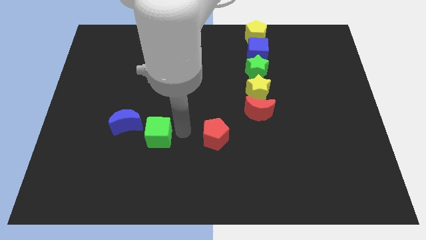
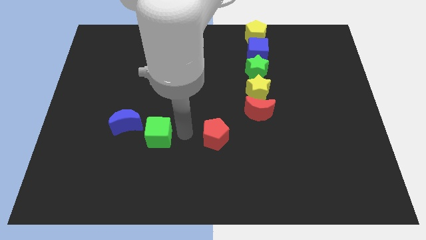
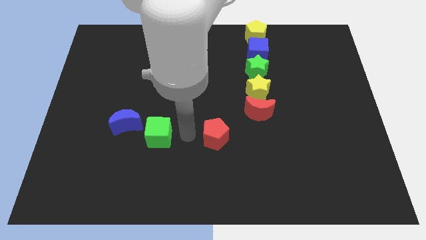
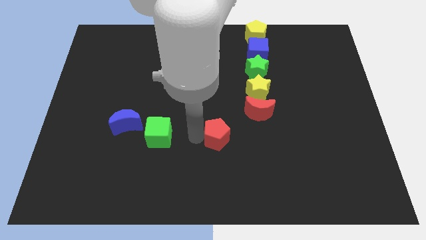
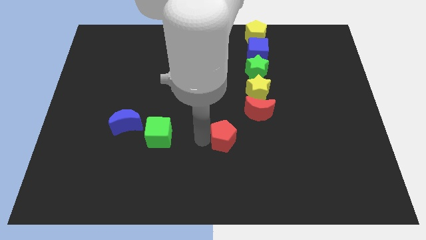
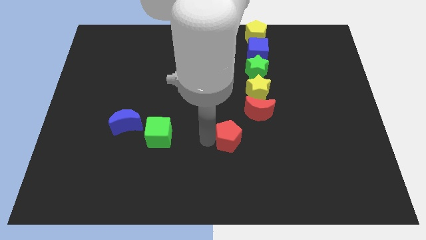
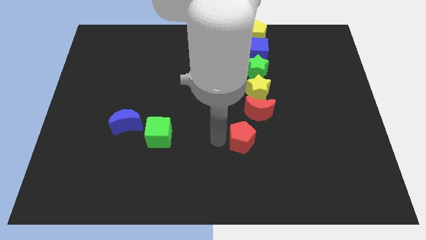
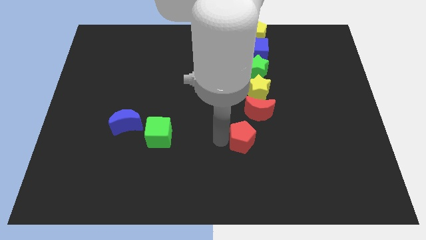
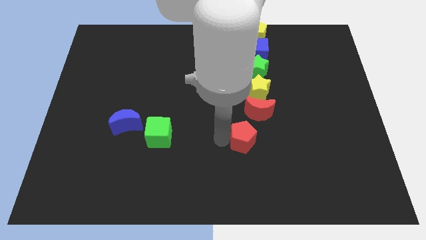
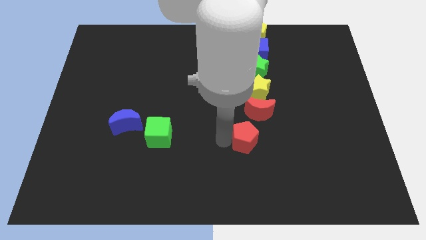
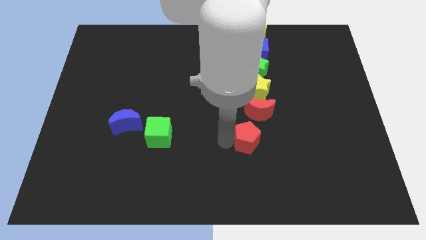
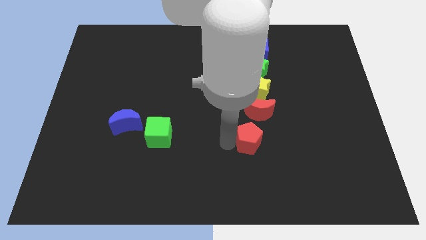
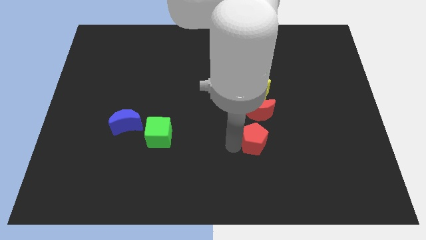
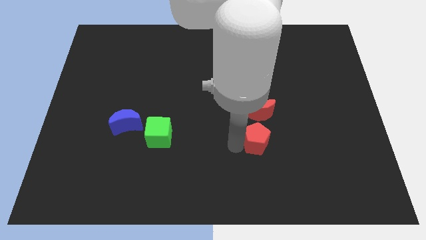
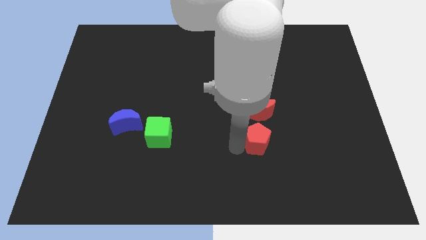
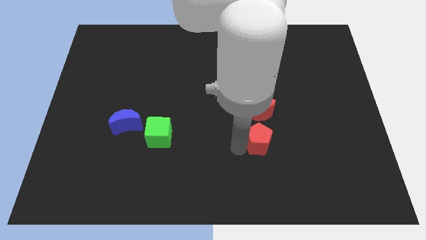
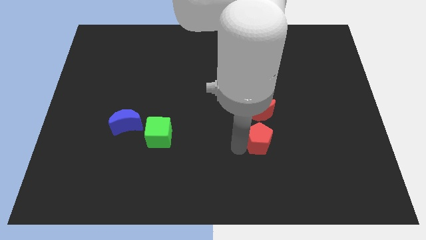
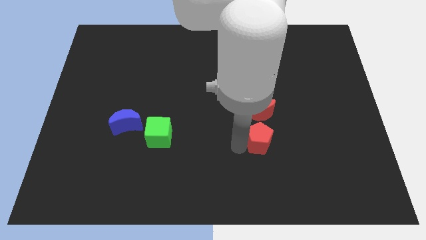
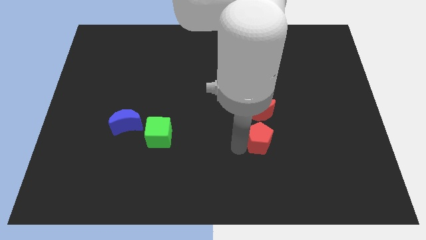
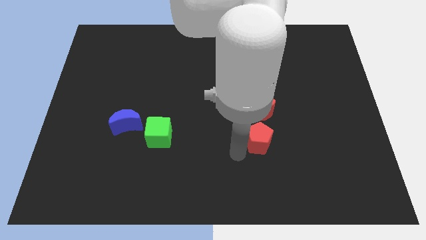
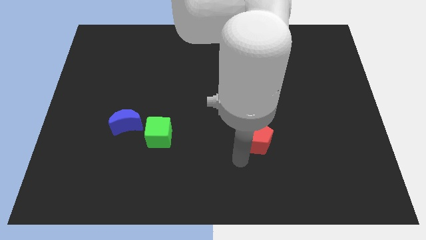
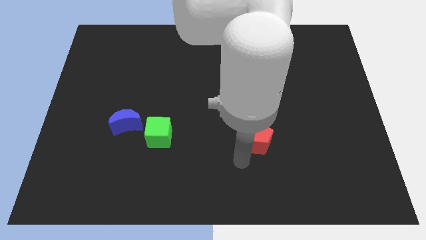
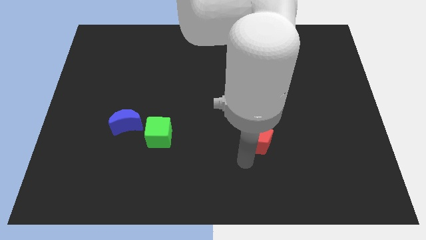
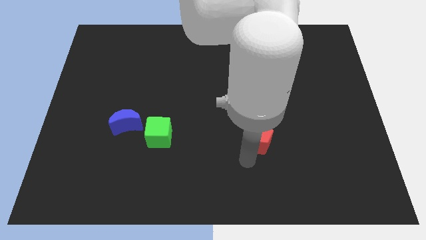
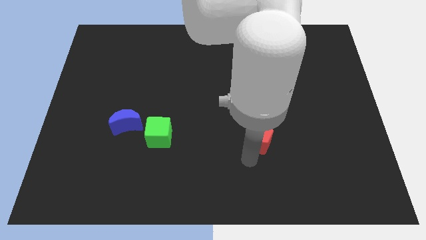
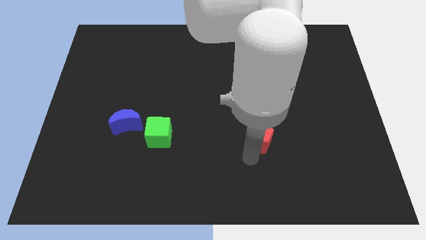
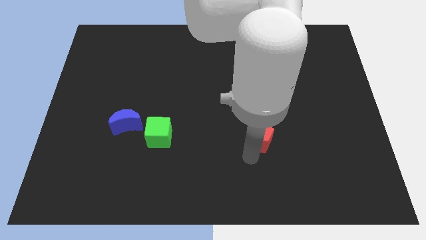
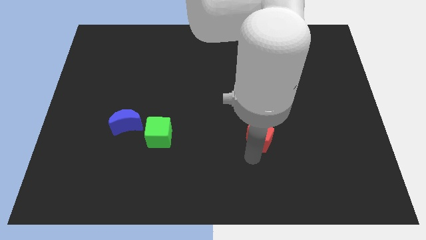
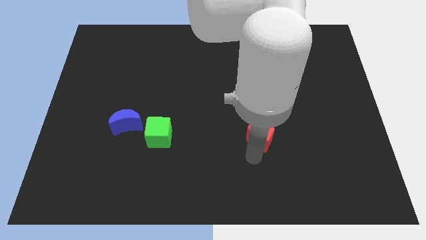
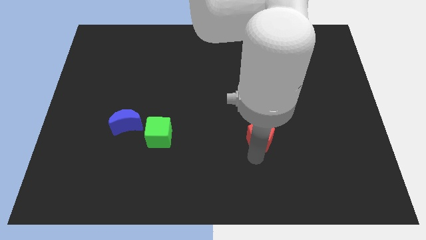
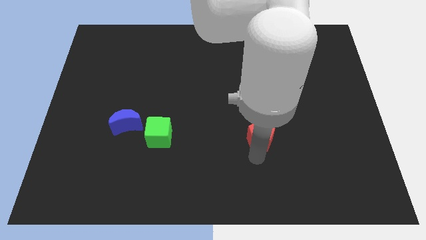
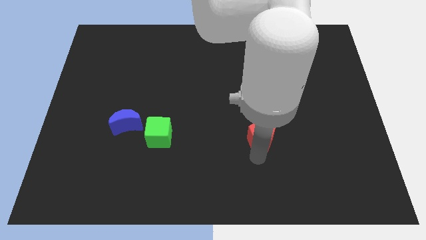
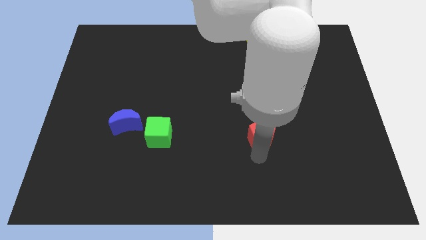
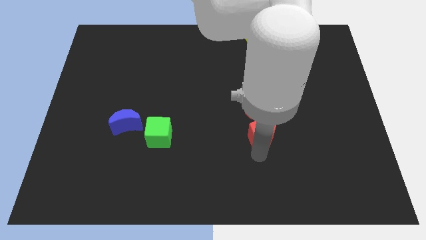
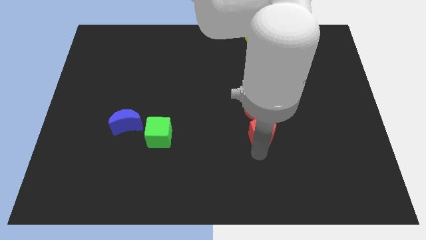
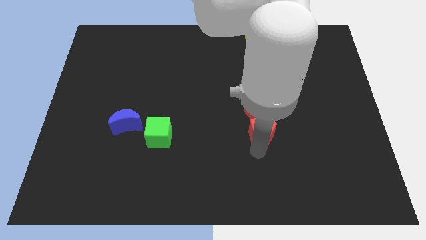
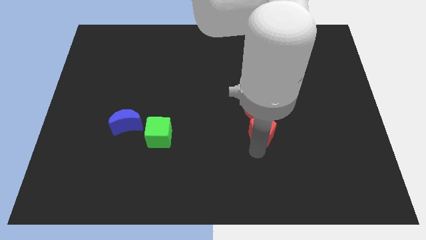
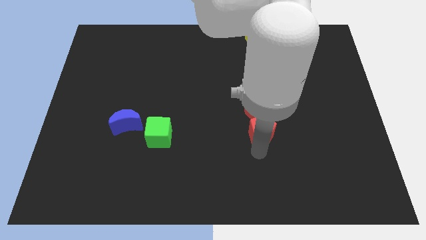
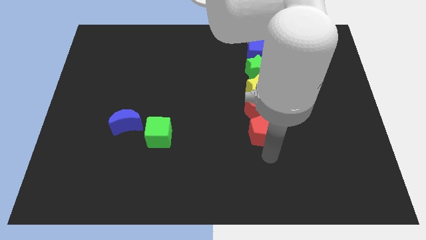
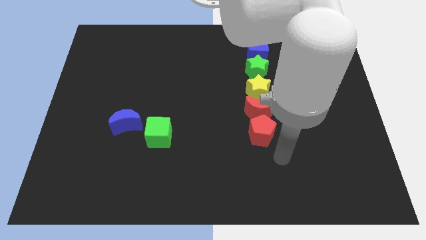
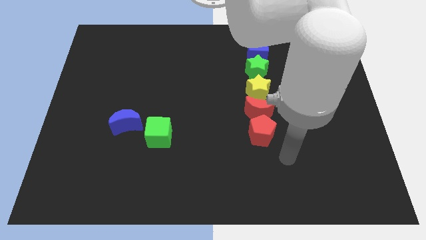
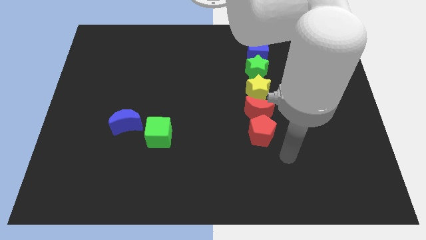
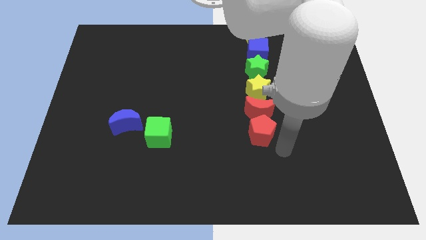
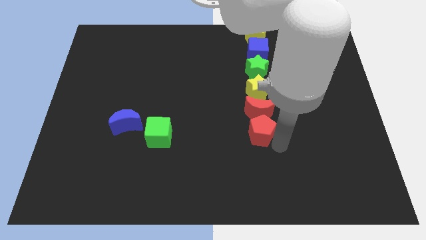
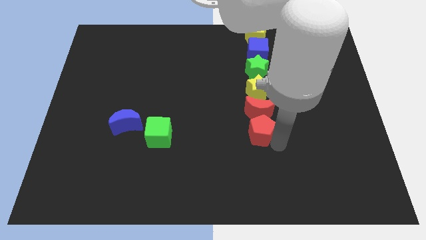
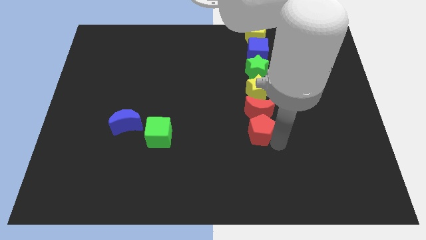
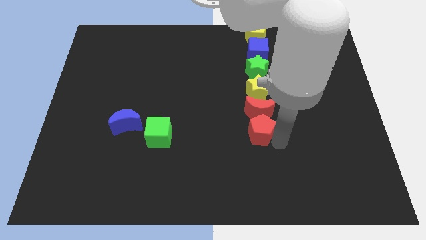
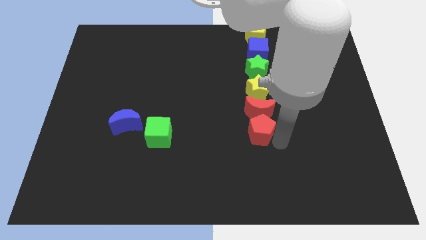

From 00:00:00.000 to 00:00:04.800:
put the red pentagon underneath the red crescent

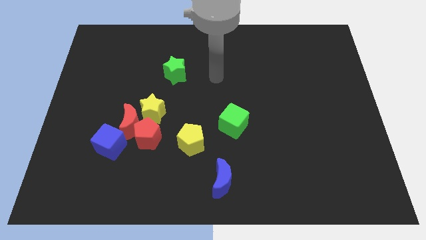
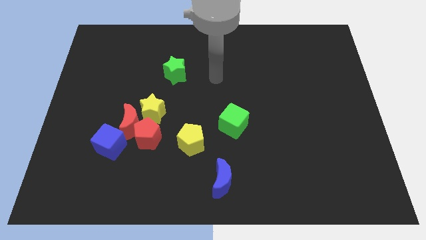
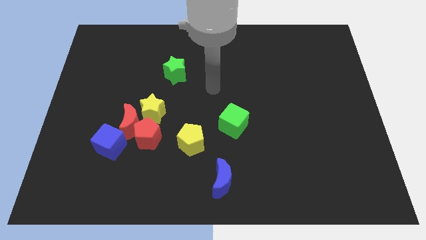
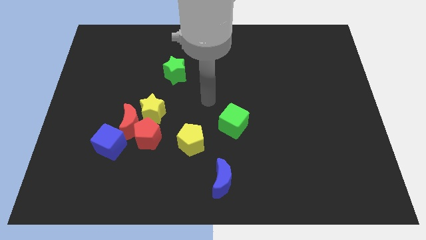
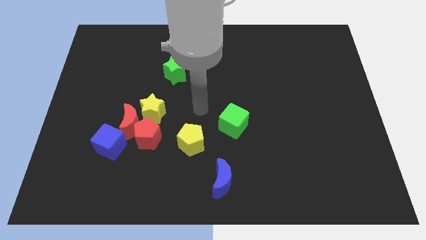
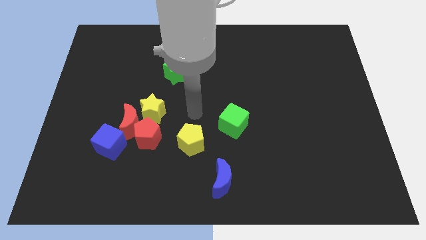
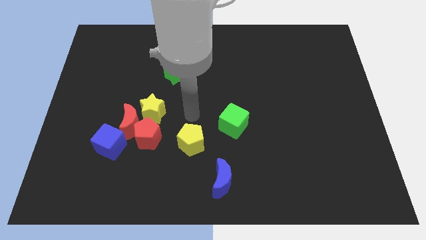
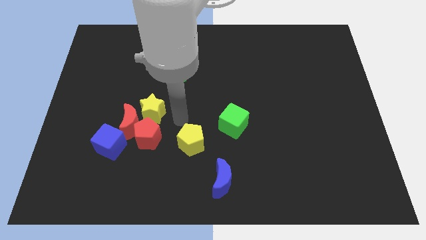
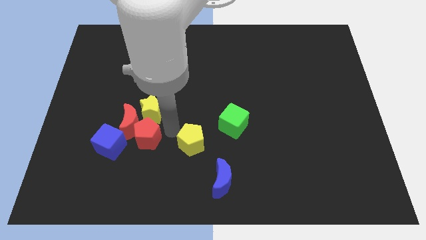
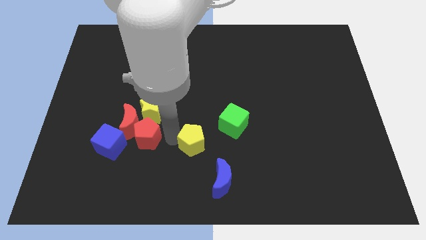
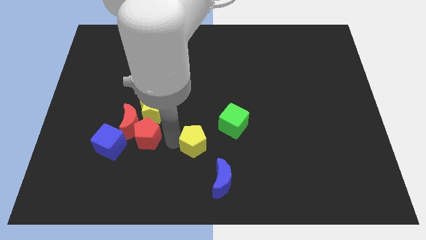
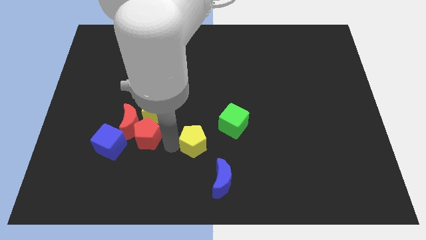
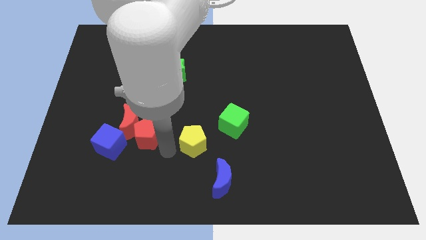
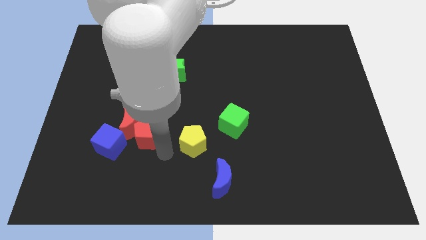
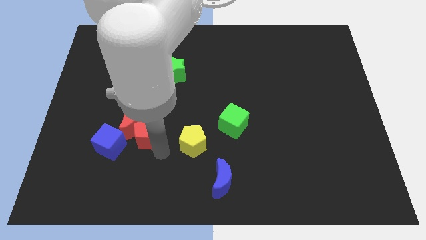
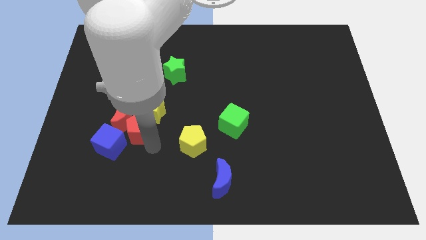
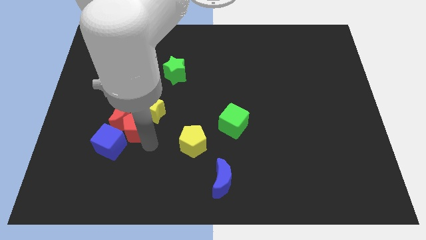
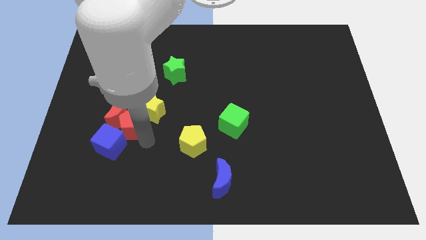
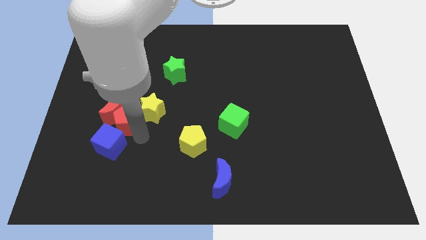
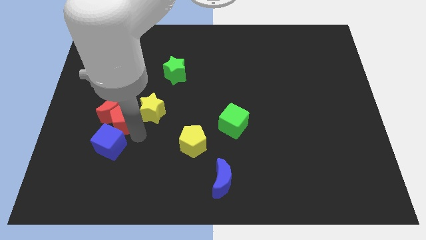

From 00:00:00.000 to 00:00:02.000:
slightly move red pentagon with red crescent

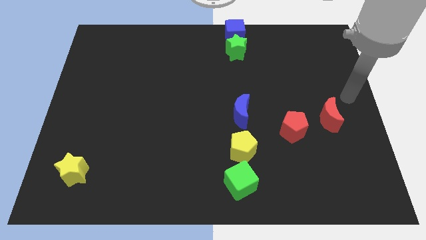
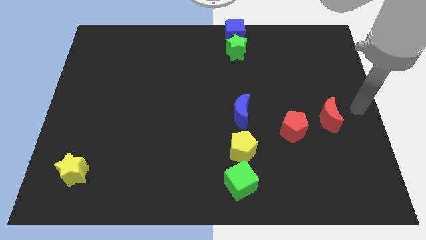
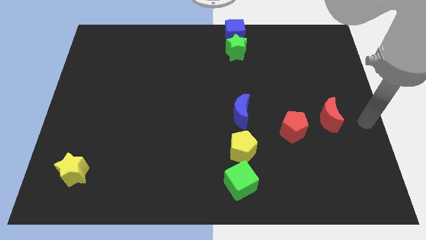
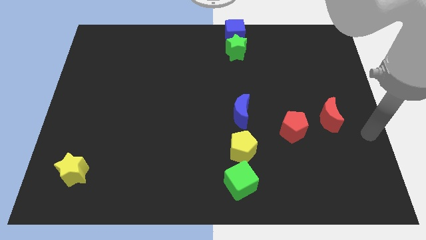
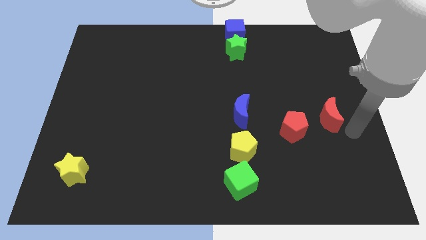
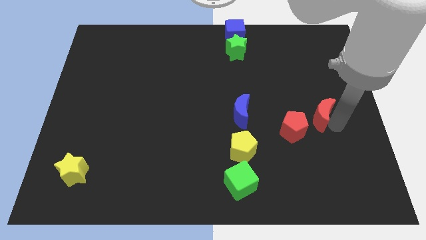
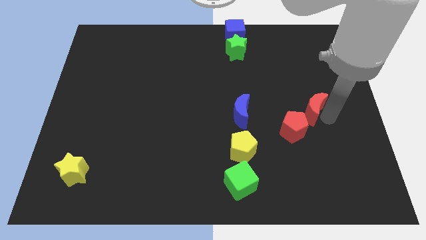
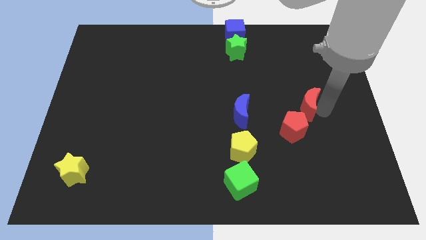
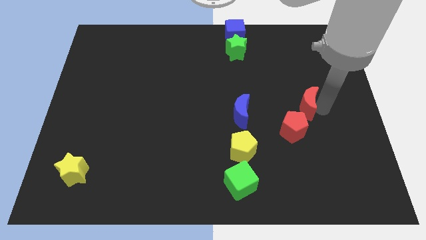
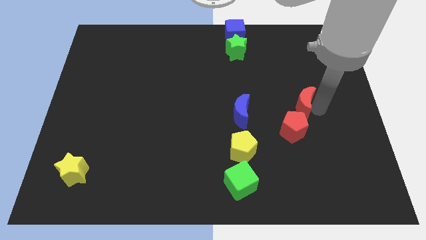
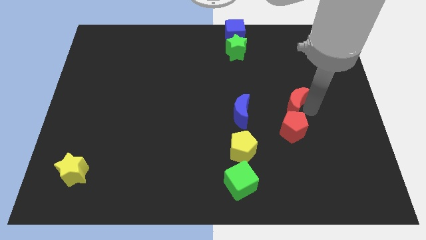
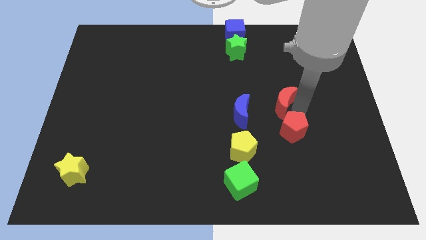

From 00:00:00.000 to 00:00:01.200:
place the red moon above red pentagon

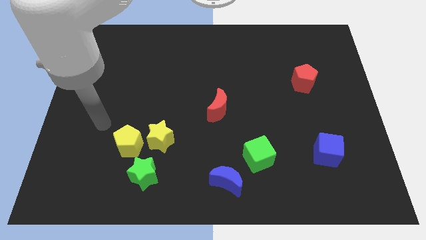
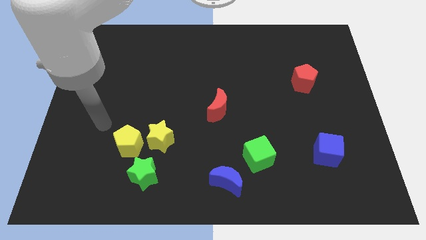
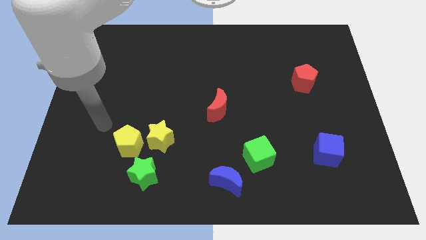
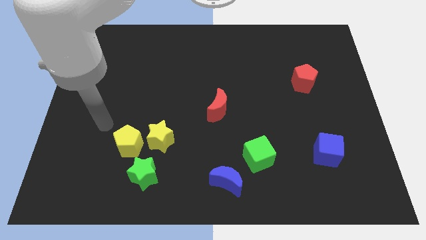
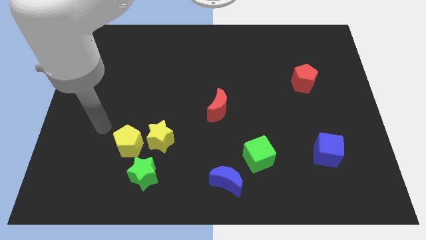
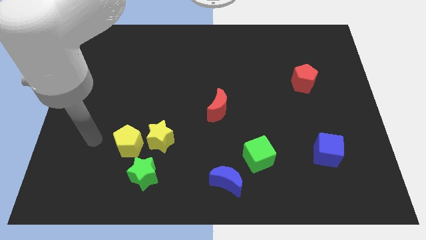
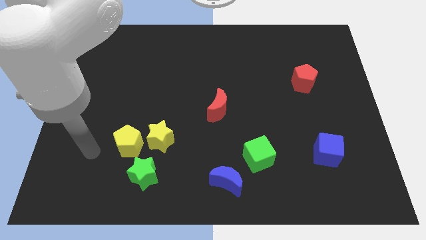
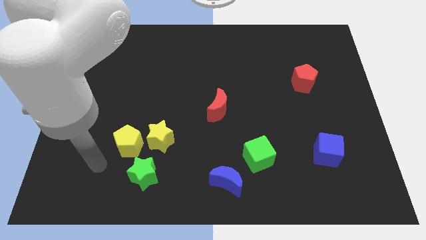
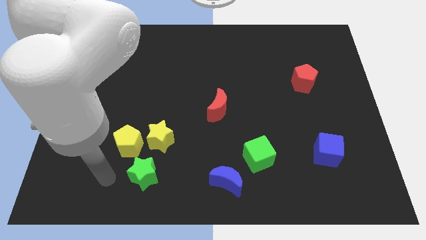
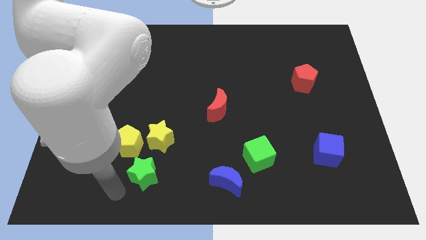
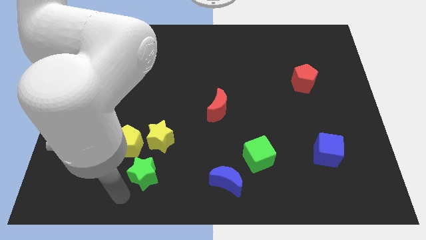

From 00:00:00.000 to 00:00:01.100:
point your arm at the bottom left of the green star
